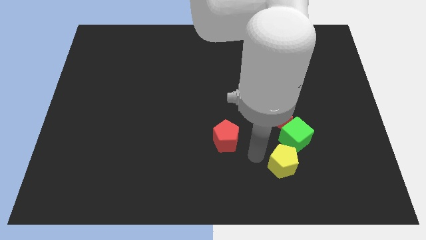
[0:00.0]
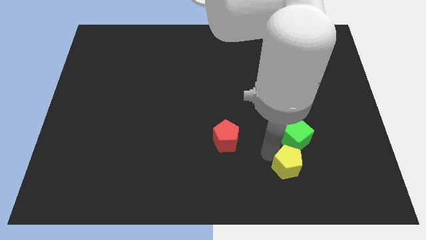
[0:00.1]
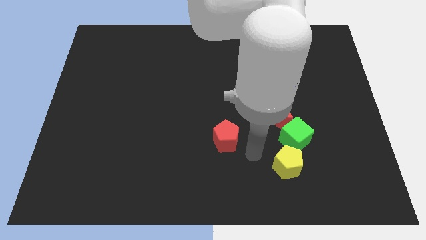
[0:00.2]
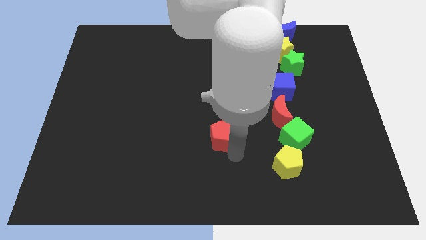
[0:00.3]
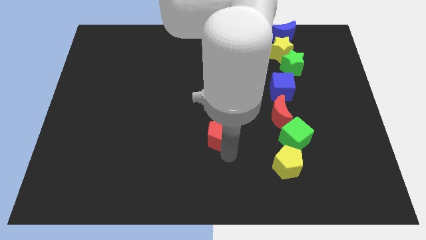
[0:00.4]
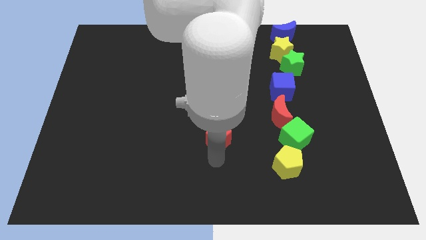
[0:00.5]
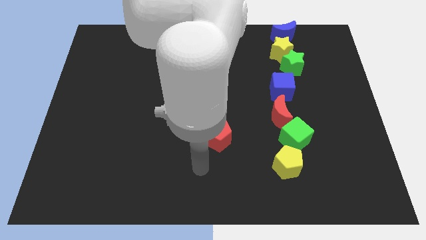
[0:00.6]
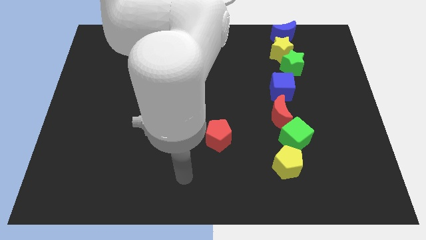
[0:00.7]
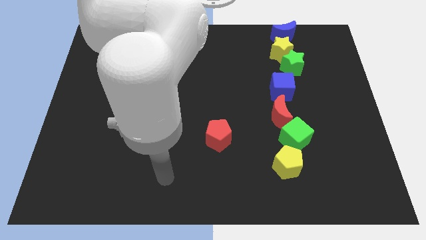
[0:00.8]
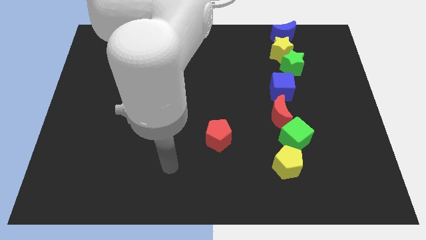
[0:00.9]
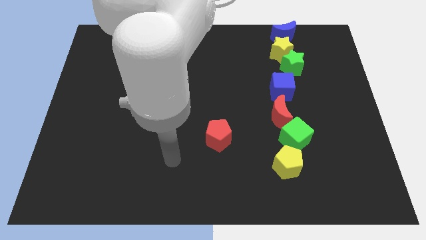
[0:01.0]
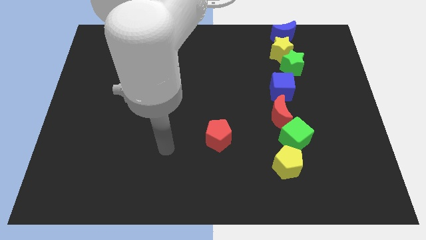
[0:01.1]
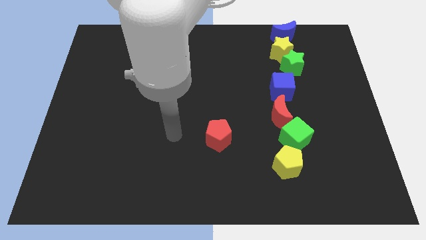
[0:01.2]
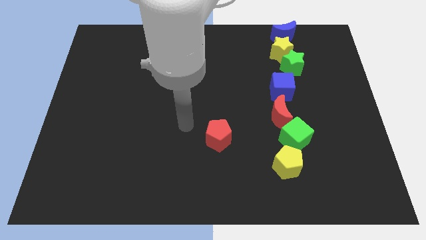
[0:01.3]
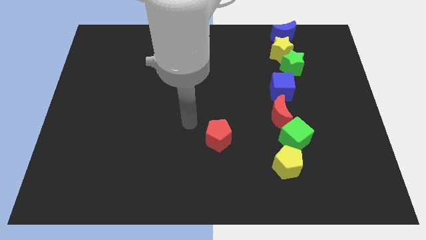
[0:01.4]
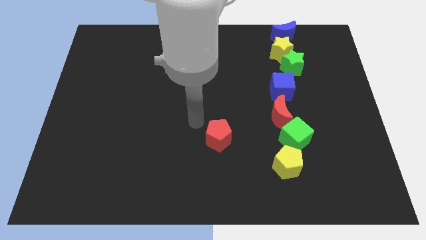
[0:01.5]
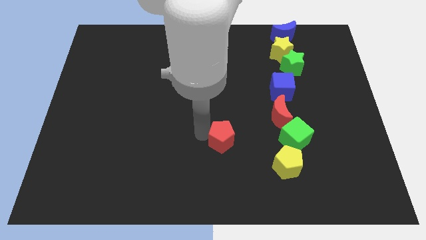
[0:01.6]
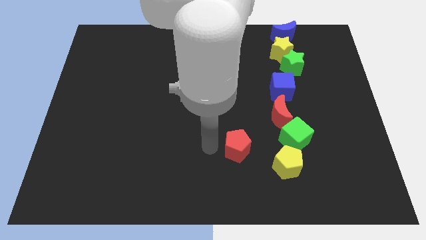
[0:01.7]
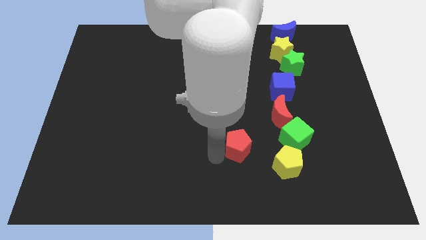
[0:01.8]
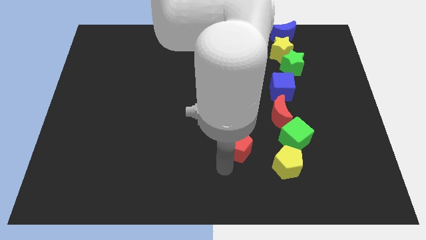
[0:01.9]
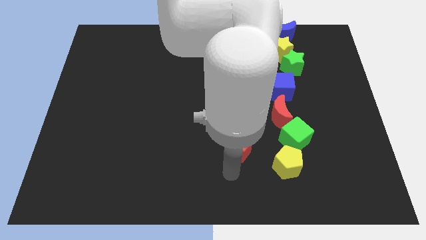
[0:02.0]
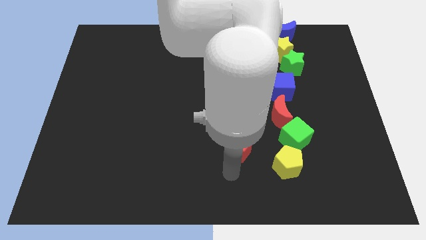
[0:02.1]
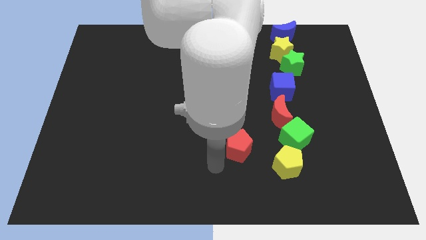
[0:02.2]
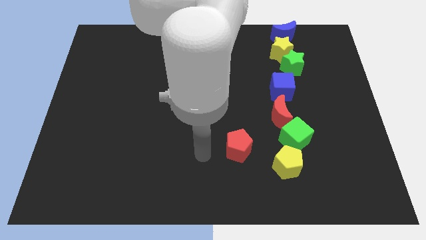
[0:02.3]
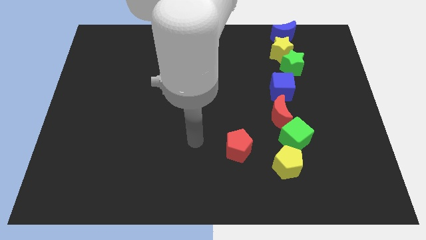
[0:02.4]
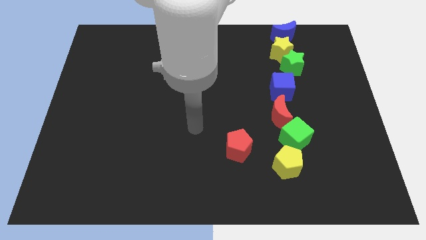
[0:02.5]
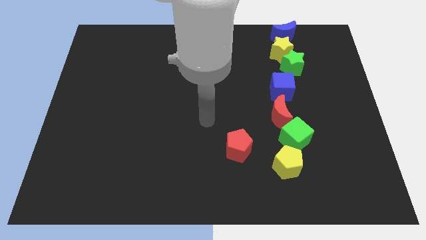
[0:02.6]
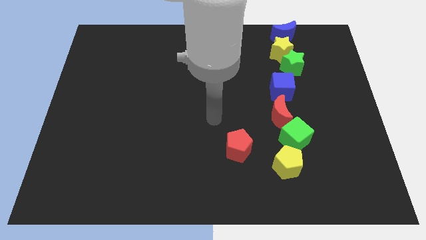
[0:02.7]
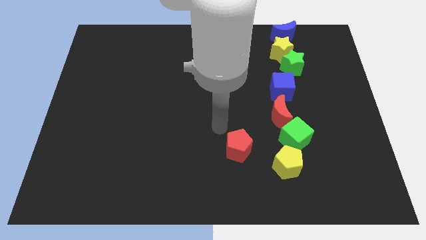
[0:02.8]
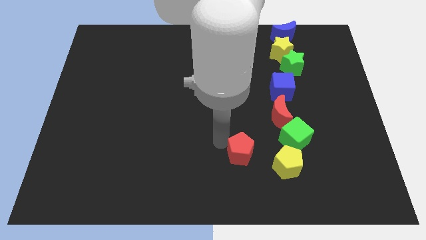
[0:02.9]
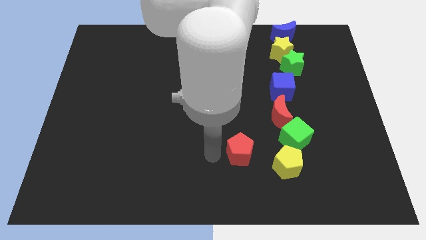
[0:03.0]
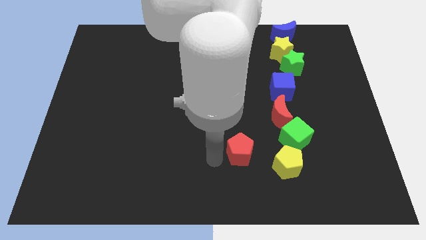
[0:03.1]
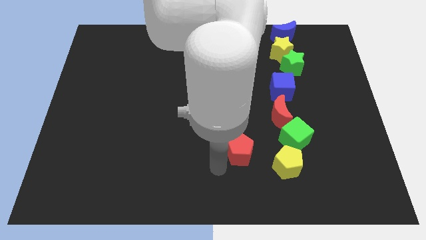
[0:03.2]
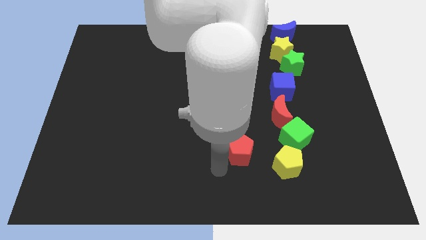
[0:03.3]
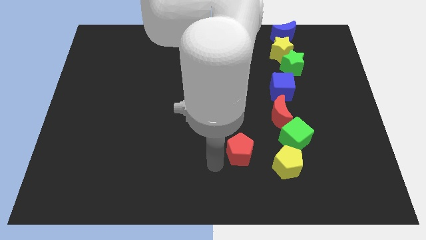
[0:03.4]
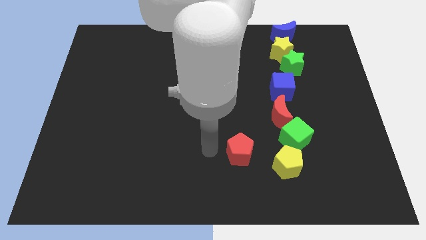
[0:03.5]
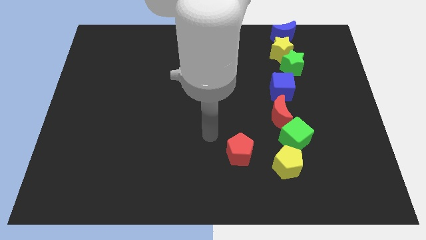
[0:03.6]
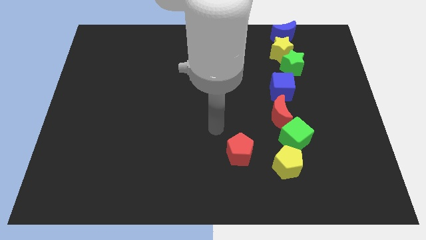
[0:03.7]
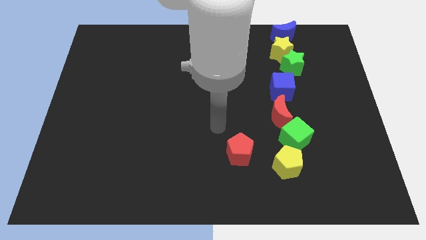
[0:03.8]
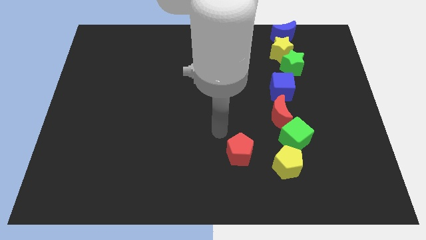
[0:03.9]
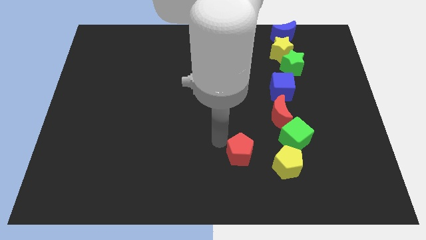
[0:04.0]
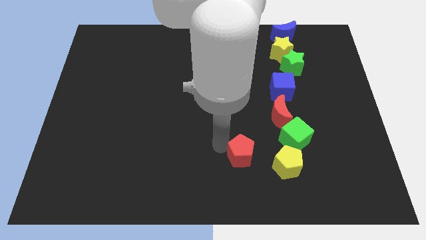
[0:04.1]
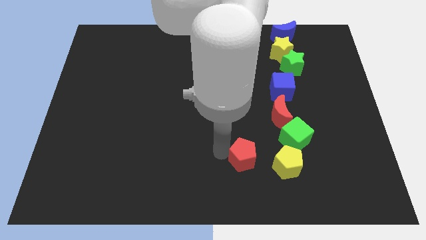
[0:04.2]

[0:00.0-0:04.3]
move red pentagon left beside the yellow pentagon

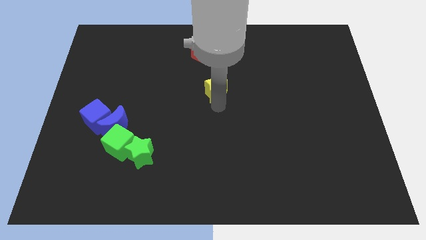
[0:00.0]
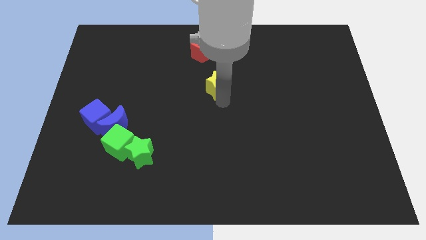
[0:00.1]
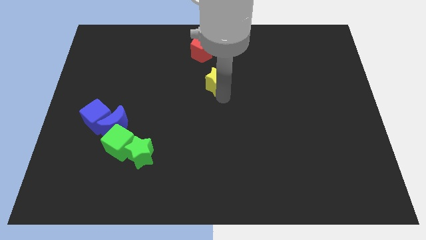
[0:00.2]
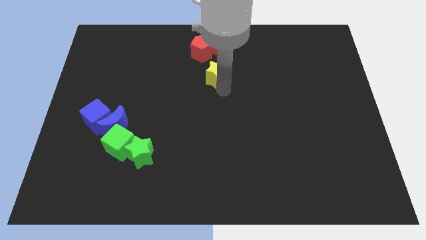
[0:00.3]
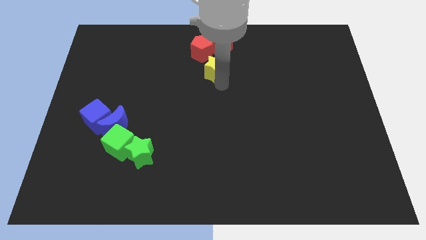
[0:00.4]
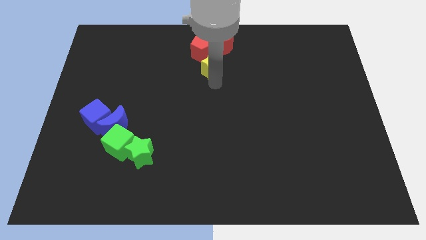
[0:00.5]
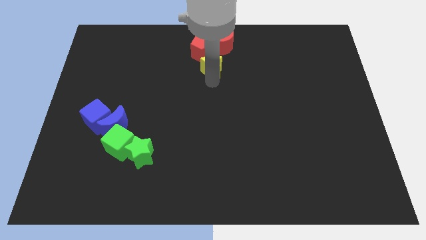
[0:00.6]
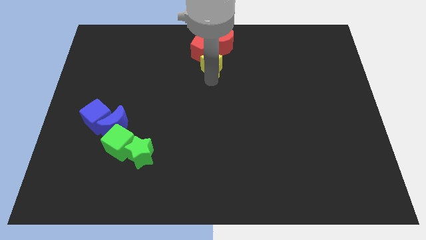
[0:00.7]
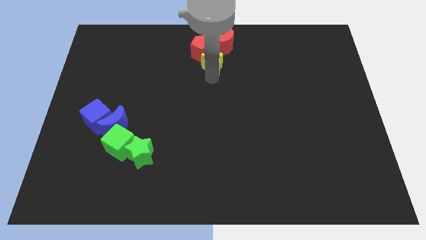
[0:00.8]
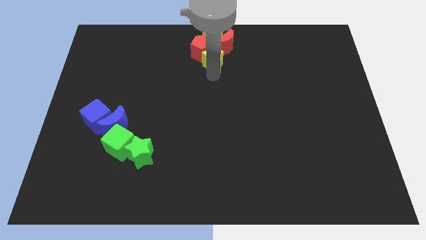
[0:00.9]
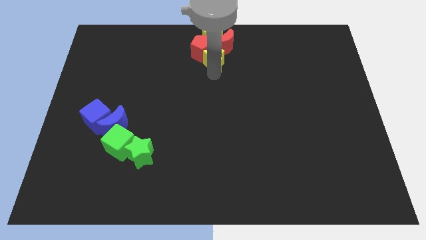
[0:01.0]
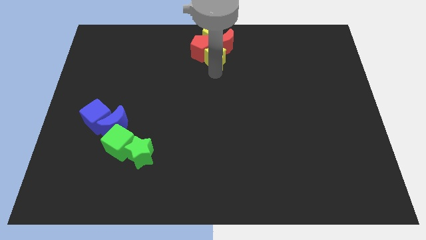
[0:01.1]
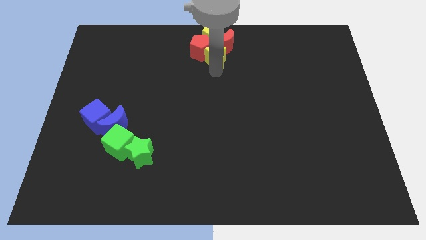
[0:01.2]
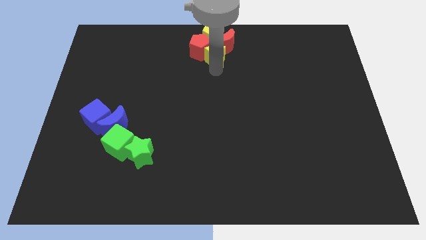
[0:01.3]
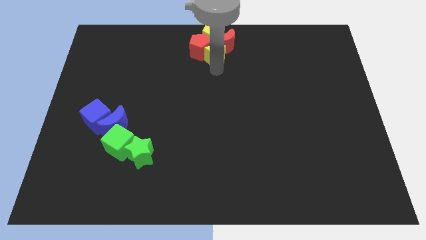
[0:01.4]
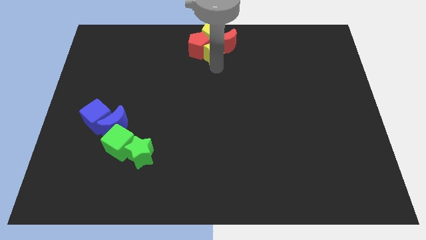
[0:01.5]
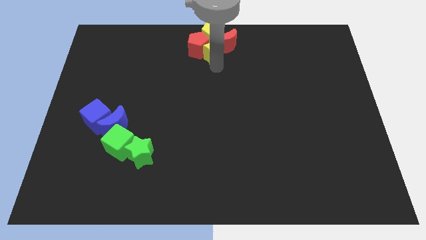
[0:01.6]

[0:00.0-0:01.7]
move the yellow star into the group of blocks

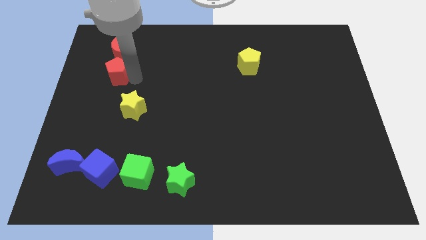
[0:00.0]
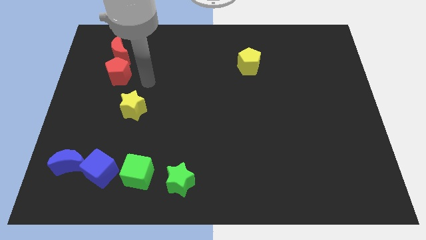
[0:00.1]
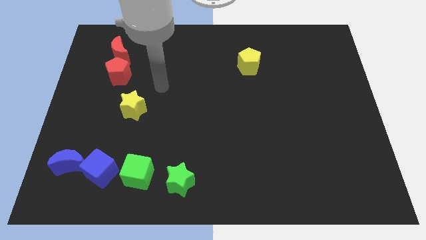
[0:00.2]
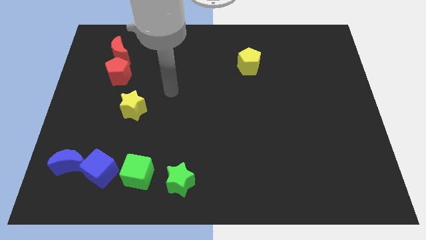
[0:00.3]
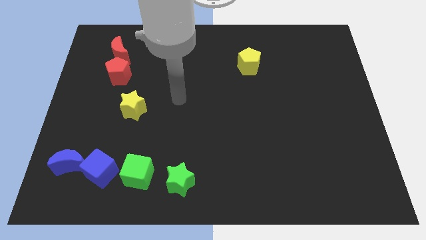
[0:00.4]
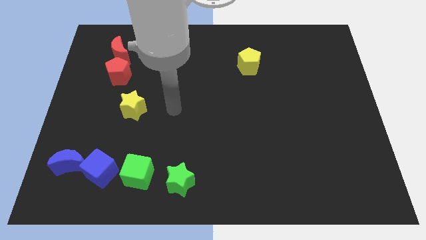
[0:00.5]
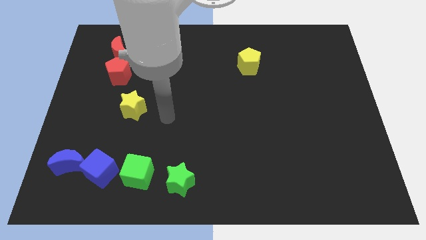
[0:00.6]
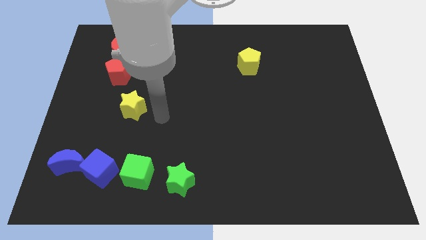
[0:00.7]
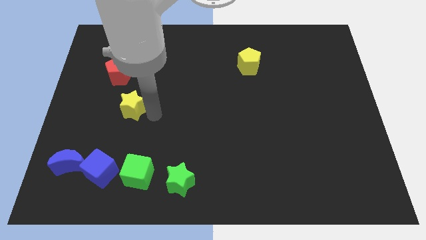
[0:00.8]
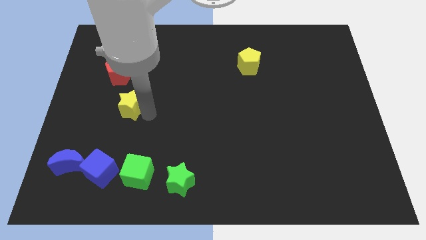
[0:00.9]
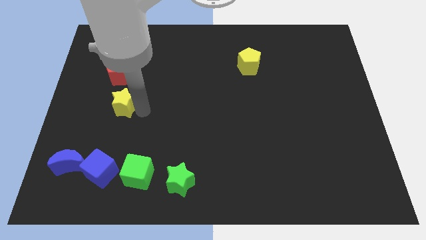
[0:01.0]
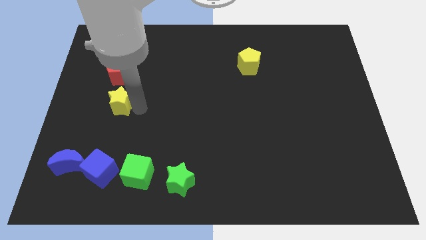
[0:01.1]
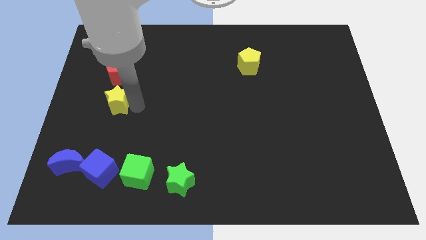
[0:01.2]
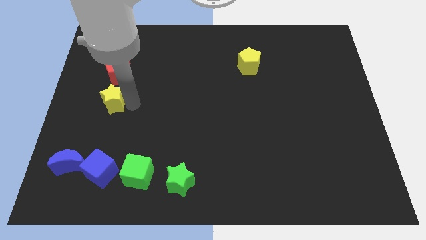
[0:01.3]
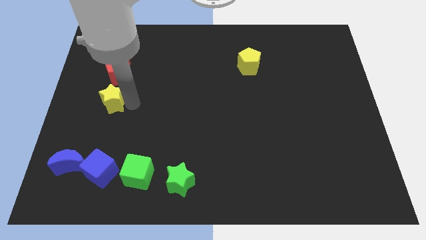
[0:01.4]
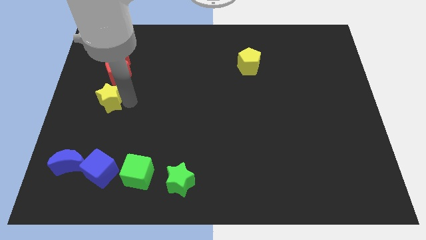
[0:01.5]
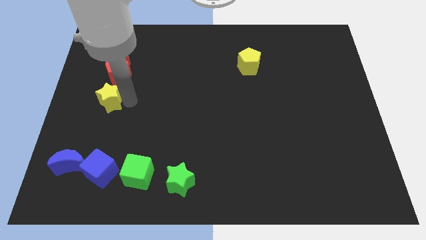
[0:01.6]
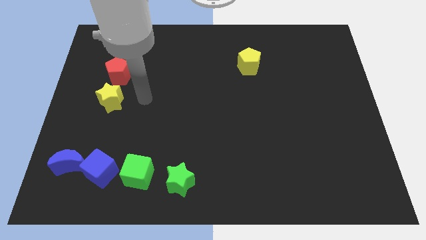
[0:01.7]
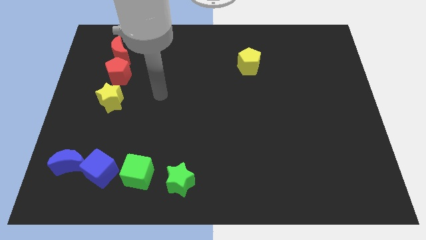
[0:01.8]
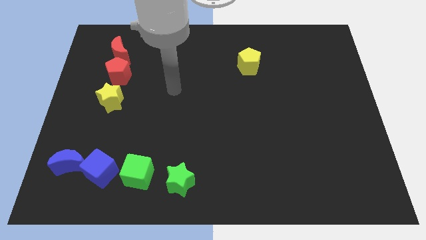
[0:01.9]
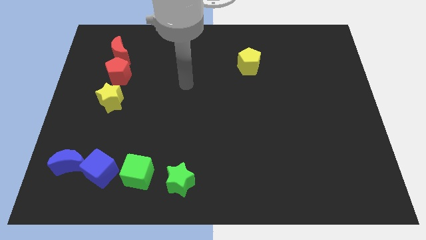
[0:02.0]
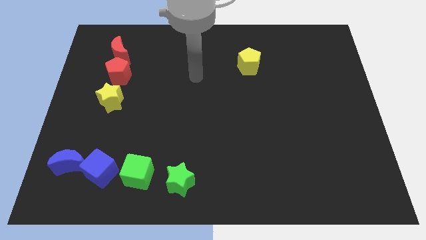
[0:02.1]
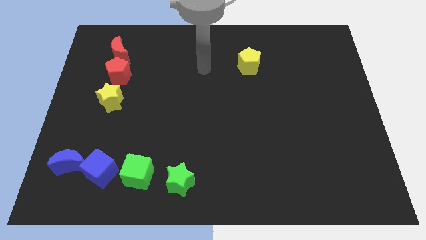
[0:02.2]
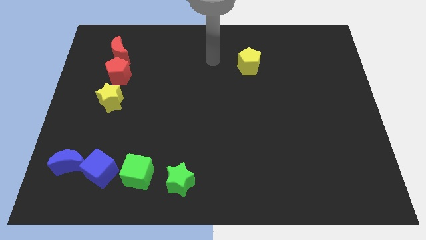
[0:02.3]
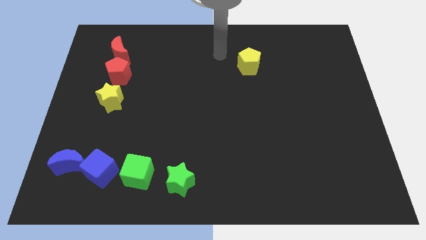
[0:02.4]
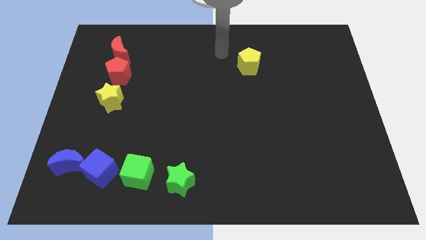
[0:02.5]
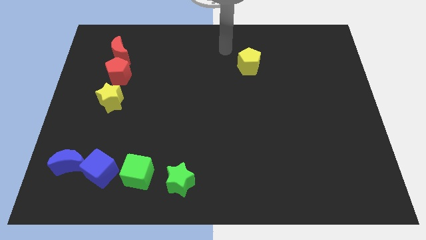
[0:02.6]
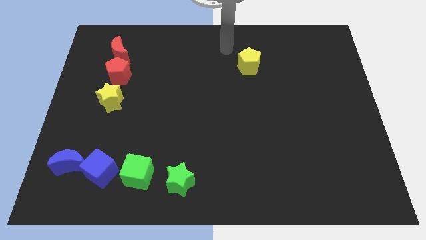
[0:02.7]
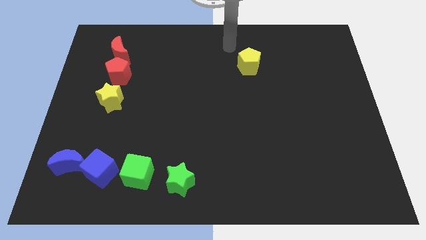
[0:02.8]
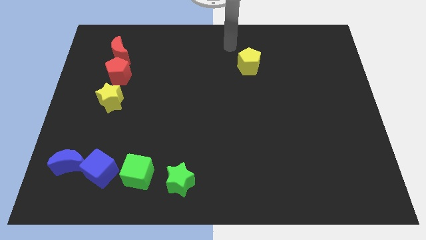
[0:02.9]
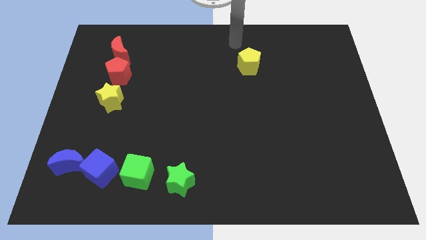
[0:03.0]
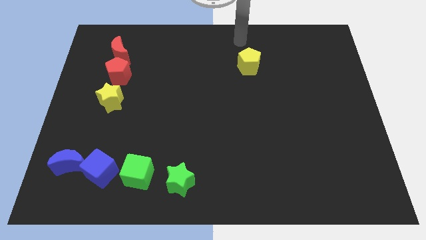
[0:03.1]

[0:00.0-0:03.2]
place the yellow star vertically below the red pentagon and move away
